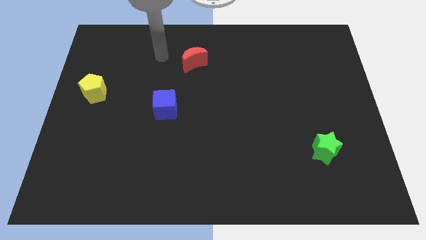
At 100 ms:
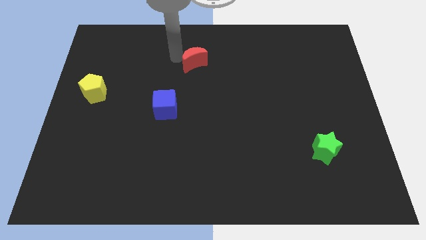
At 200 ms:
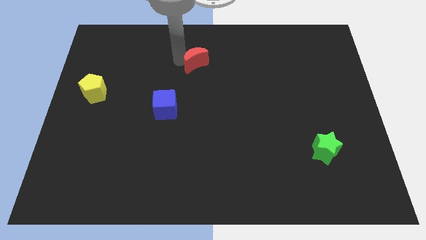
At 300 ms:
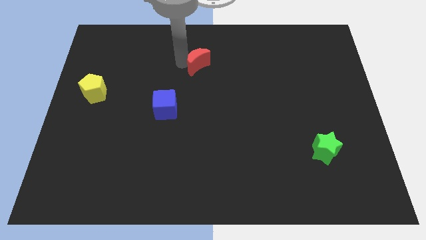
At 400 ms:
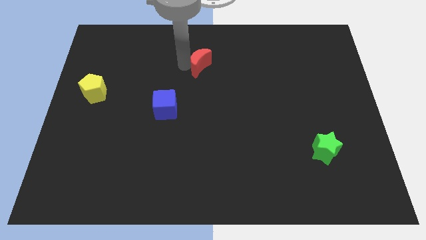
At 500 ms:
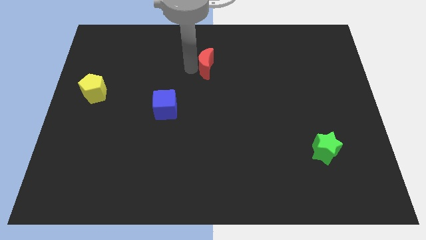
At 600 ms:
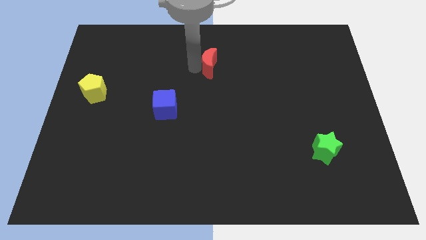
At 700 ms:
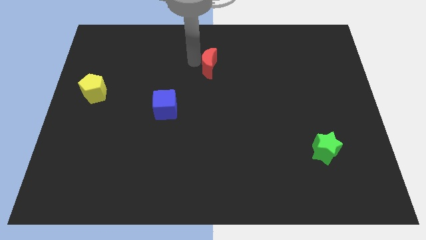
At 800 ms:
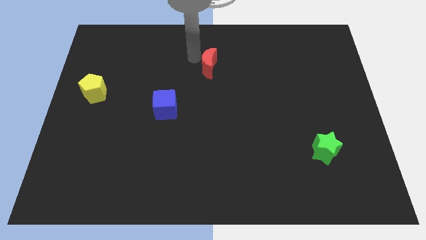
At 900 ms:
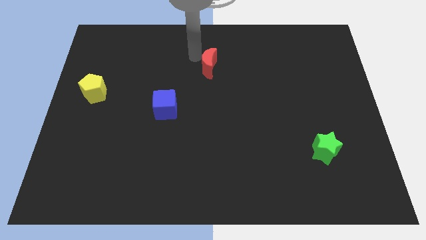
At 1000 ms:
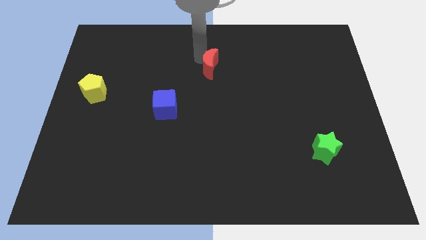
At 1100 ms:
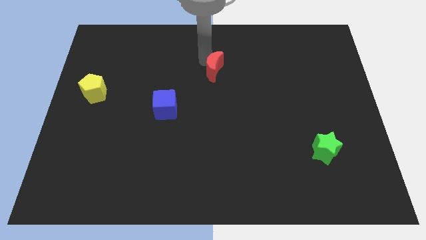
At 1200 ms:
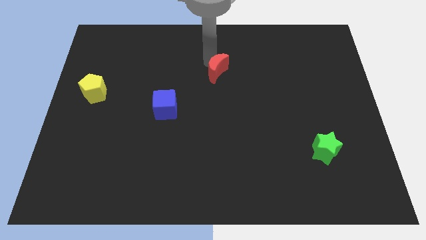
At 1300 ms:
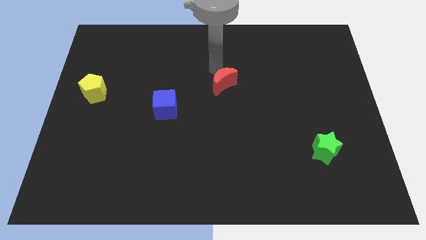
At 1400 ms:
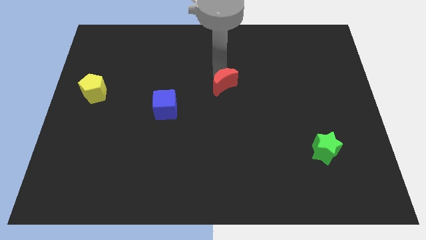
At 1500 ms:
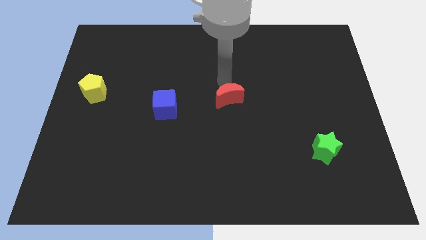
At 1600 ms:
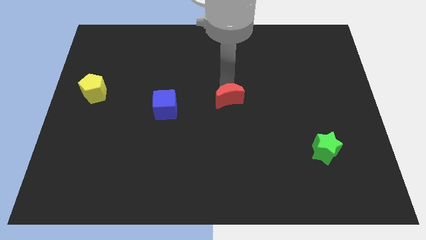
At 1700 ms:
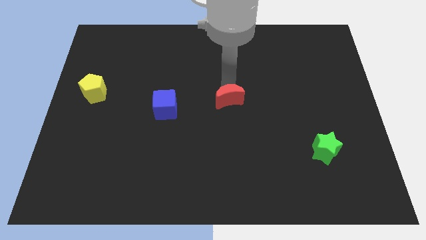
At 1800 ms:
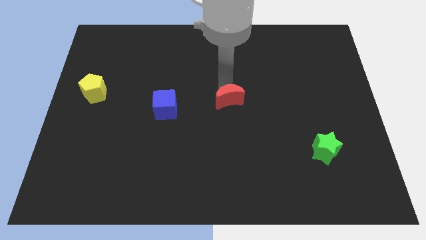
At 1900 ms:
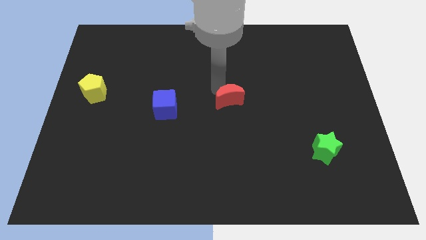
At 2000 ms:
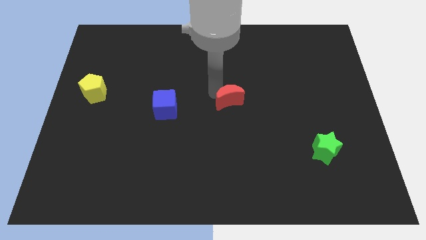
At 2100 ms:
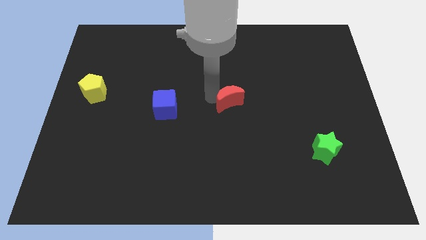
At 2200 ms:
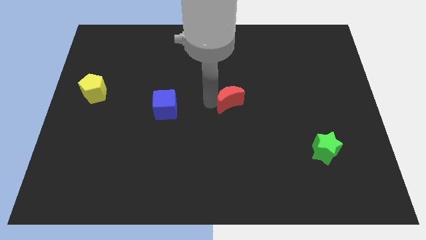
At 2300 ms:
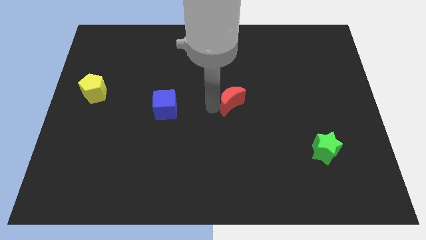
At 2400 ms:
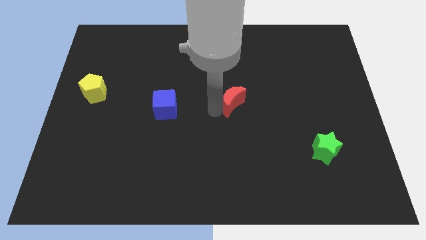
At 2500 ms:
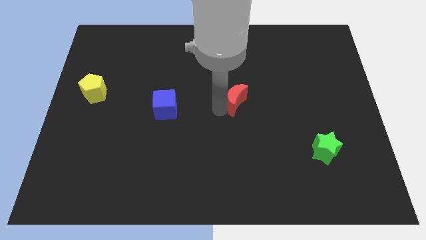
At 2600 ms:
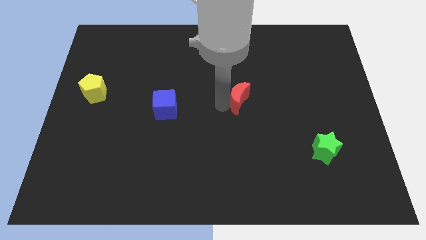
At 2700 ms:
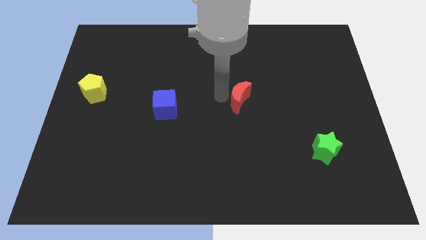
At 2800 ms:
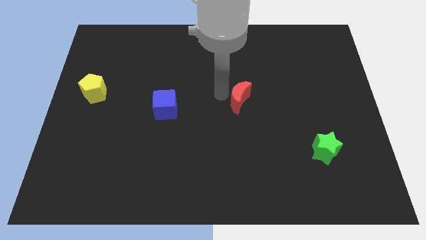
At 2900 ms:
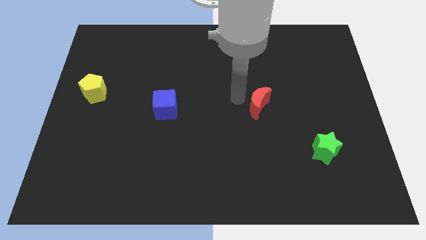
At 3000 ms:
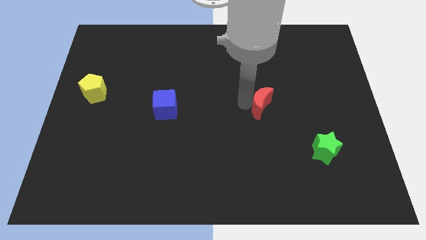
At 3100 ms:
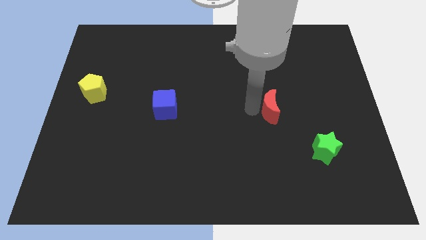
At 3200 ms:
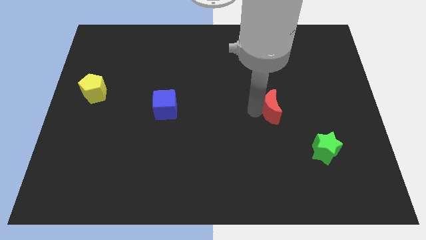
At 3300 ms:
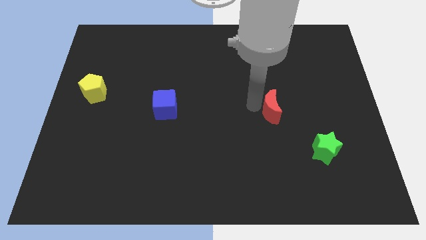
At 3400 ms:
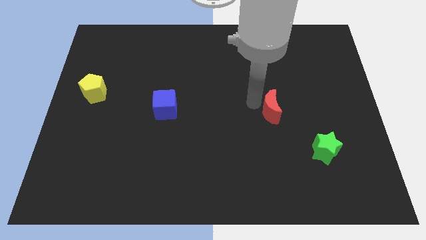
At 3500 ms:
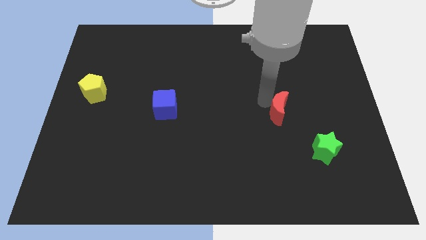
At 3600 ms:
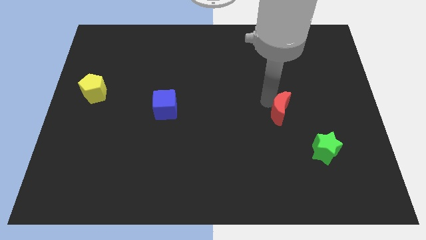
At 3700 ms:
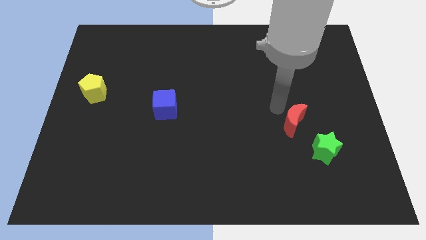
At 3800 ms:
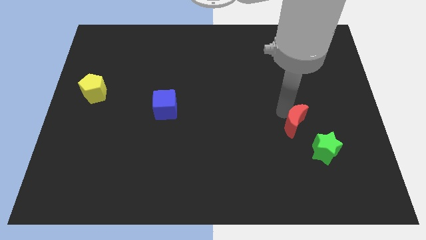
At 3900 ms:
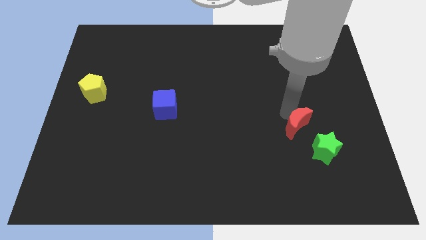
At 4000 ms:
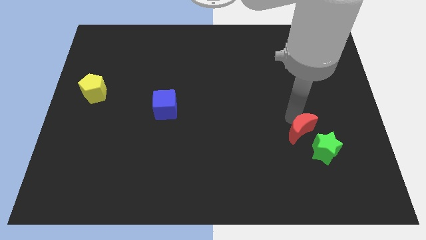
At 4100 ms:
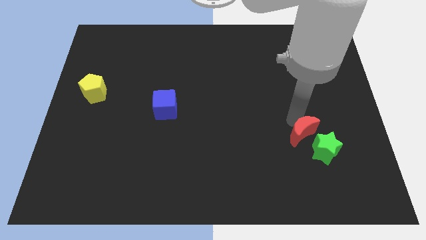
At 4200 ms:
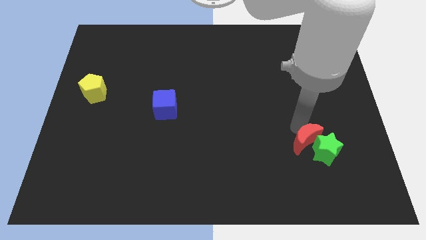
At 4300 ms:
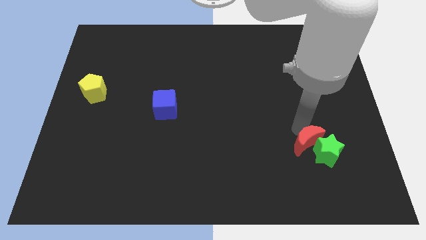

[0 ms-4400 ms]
put the red moon to the green block

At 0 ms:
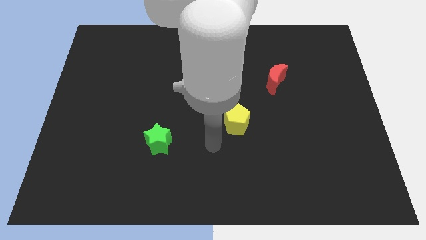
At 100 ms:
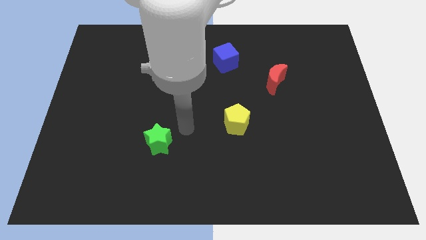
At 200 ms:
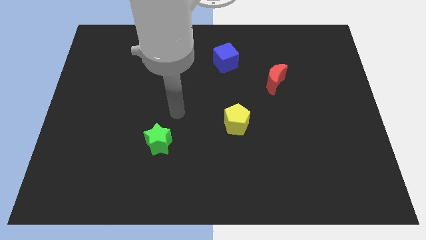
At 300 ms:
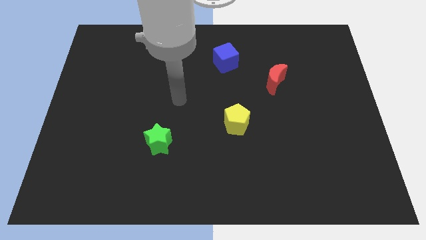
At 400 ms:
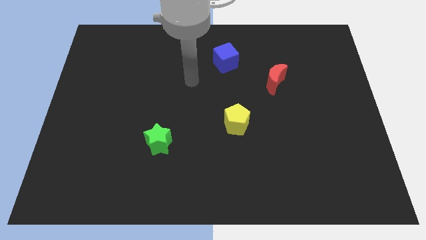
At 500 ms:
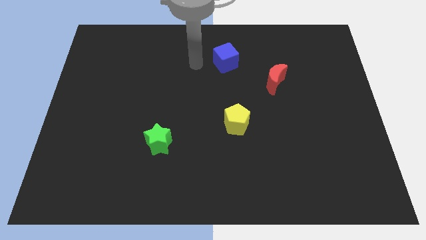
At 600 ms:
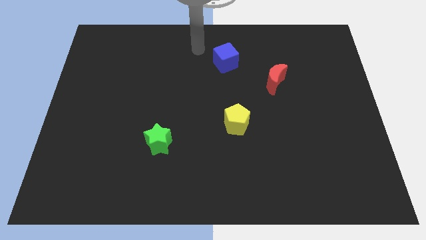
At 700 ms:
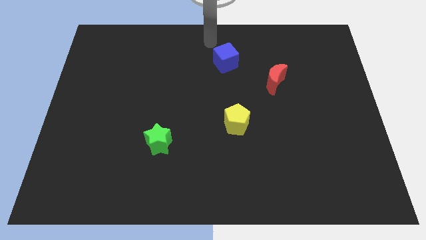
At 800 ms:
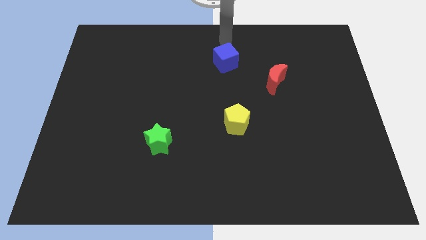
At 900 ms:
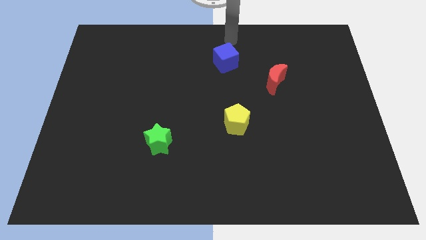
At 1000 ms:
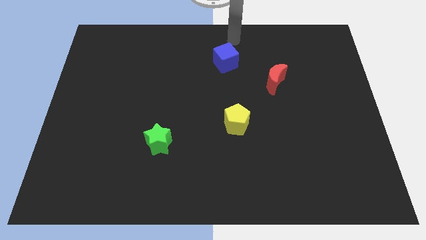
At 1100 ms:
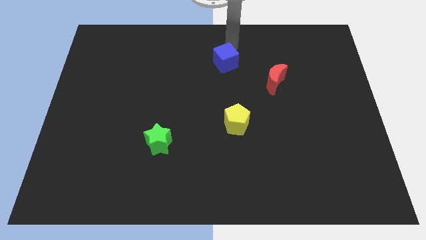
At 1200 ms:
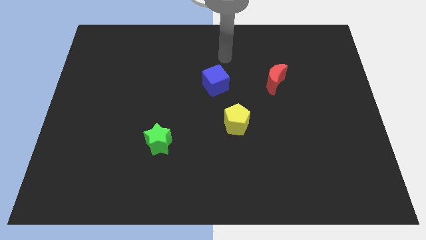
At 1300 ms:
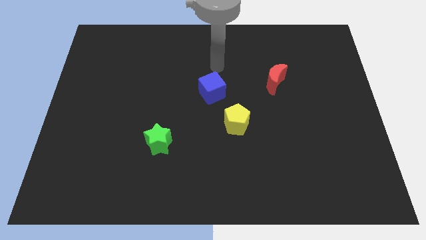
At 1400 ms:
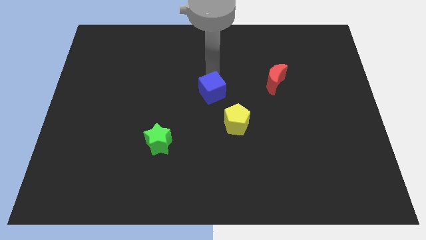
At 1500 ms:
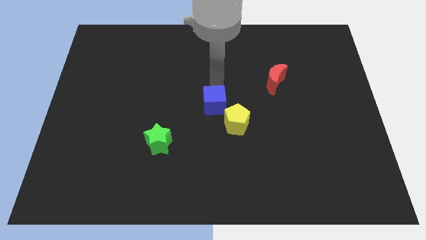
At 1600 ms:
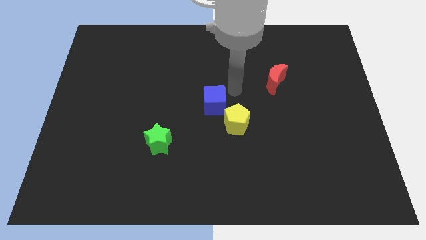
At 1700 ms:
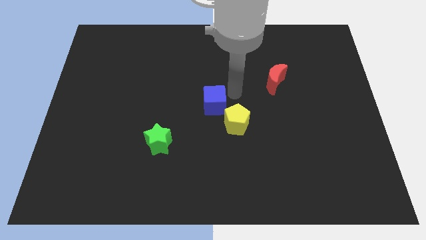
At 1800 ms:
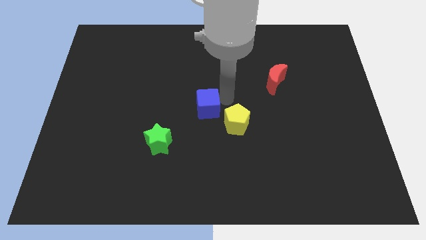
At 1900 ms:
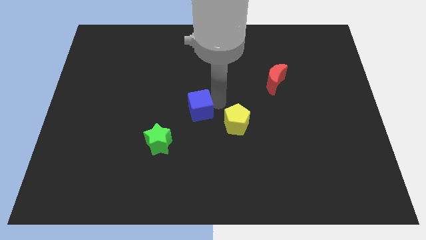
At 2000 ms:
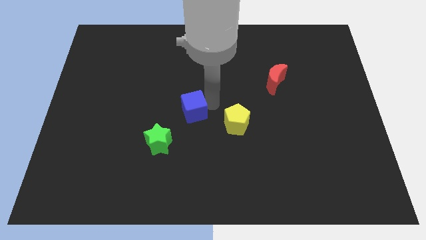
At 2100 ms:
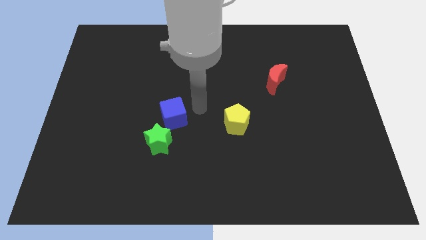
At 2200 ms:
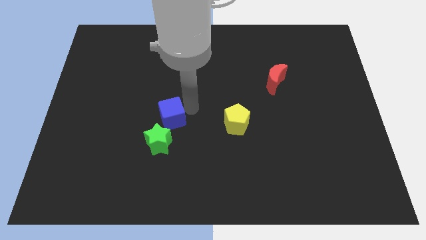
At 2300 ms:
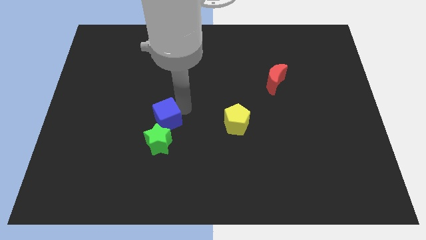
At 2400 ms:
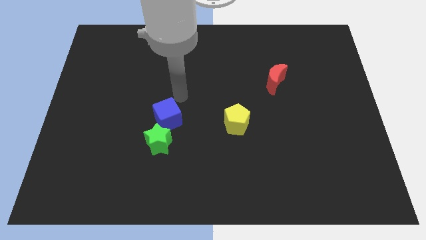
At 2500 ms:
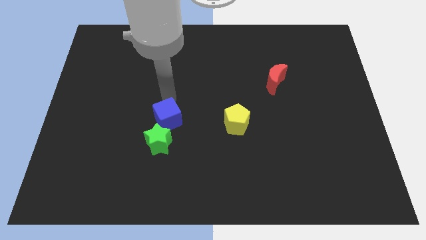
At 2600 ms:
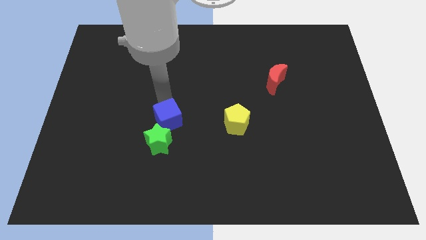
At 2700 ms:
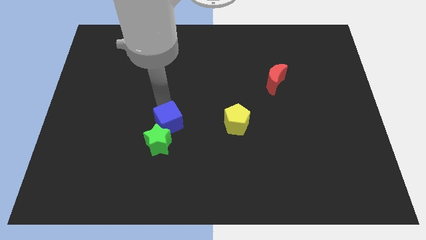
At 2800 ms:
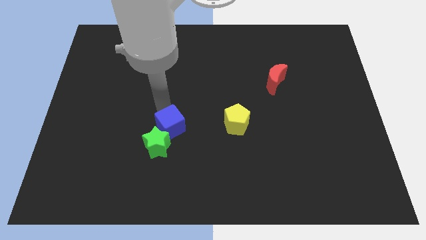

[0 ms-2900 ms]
move the cube towards the star

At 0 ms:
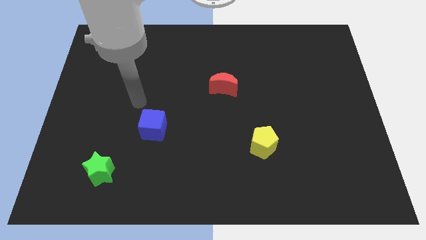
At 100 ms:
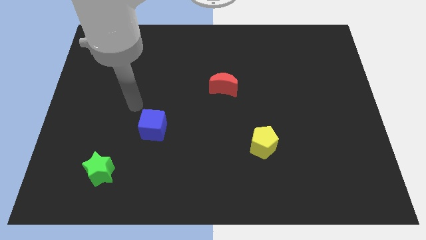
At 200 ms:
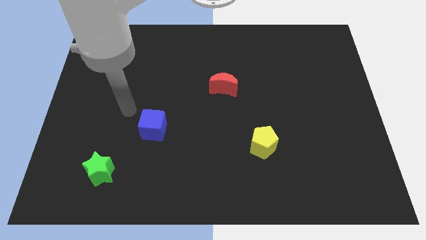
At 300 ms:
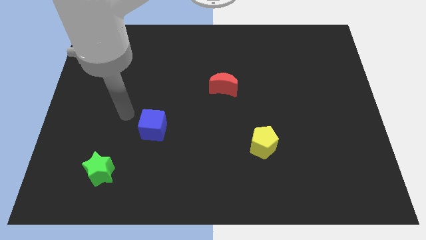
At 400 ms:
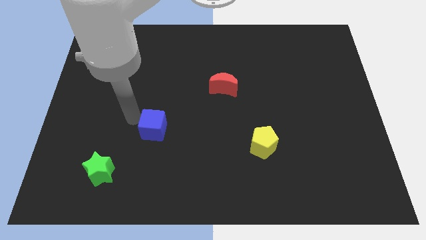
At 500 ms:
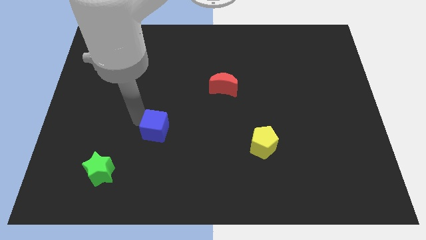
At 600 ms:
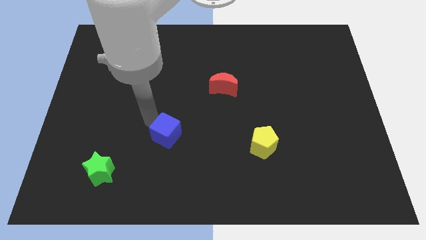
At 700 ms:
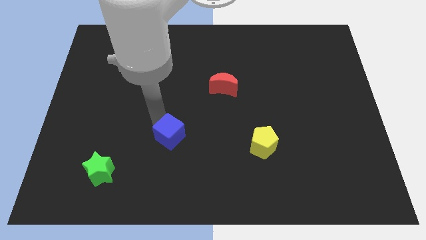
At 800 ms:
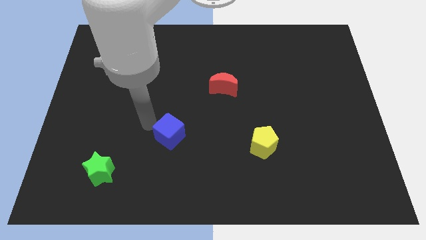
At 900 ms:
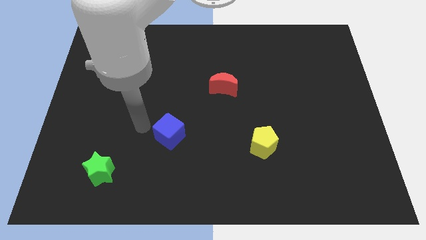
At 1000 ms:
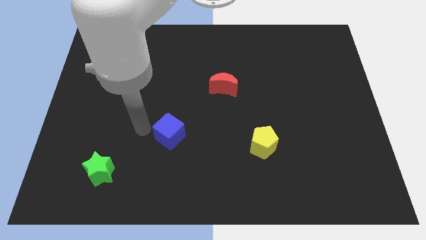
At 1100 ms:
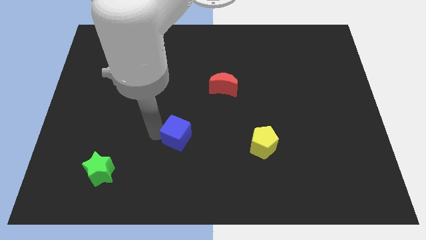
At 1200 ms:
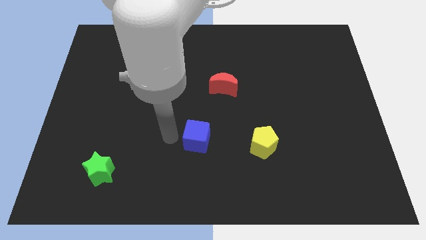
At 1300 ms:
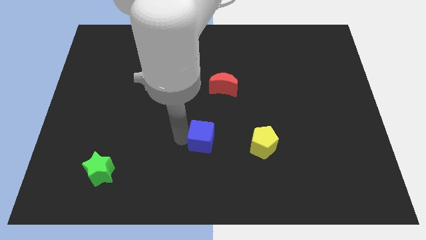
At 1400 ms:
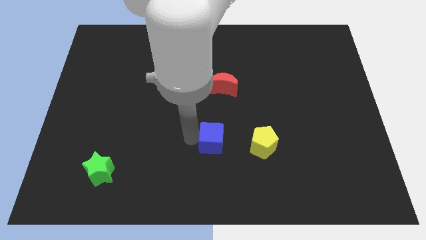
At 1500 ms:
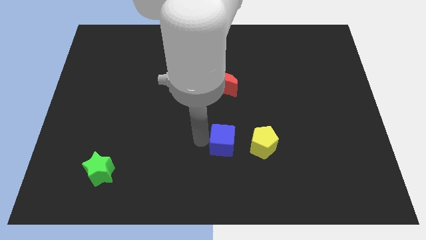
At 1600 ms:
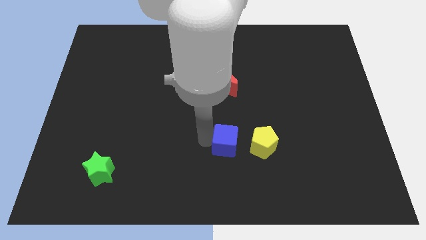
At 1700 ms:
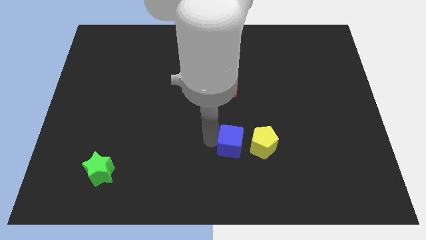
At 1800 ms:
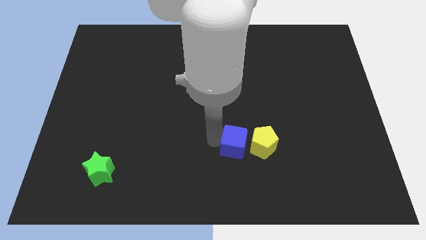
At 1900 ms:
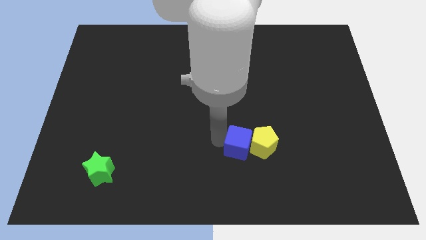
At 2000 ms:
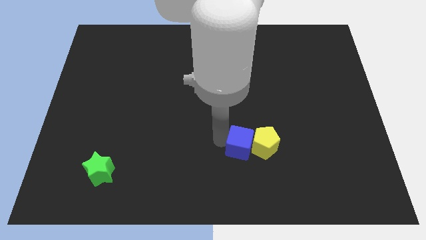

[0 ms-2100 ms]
move the blue cube next to the yellow block
